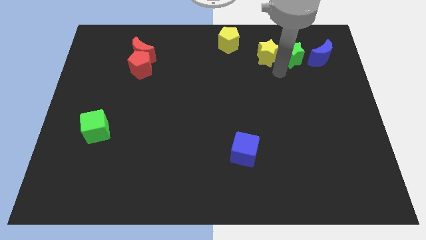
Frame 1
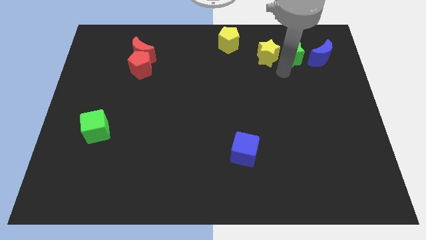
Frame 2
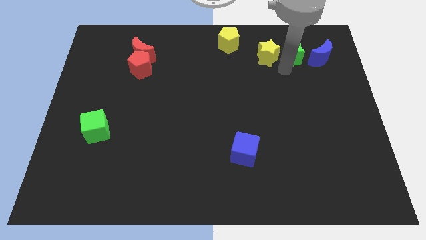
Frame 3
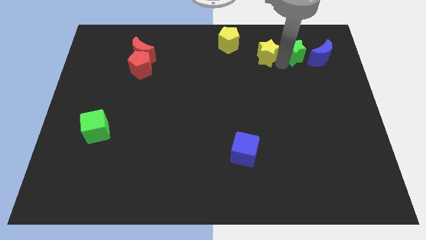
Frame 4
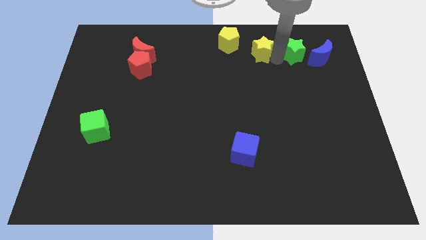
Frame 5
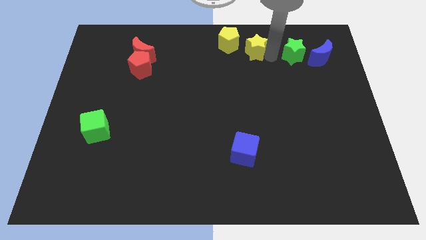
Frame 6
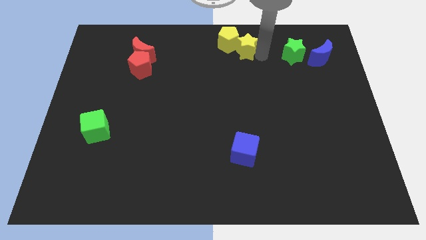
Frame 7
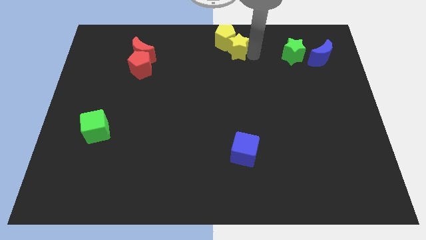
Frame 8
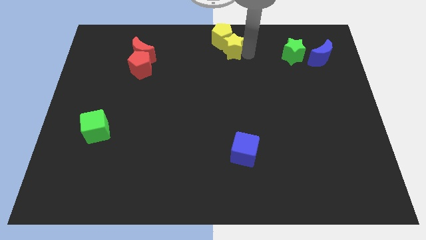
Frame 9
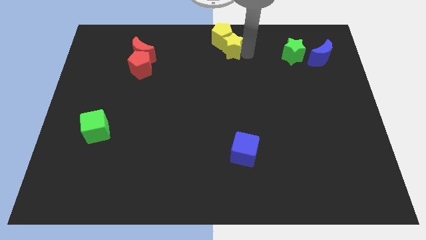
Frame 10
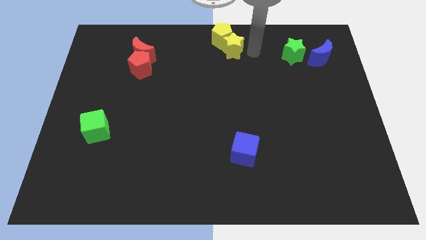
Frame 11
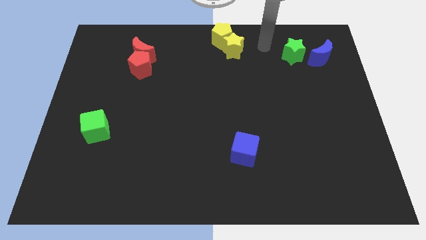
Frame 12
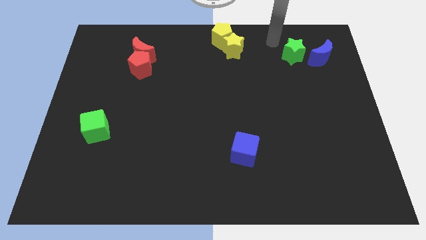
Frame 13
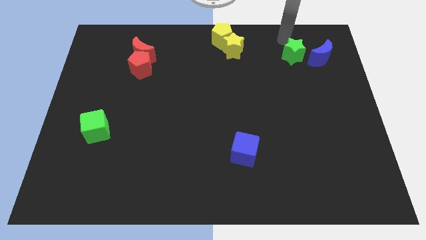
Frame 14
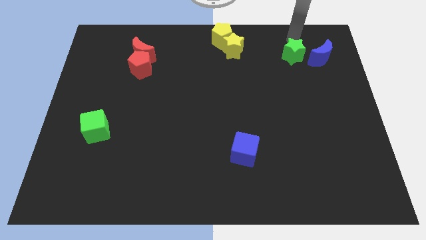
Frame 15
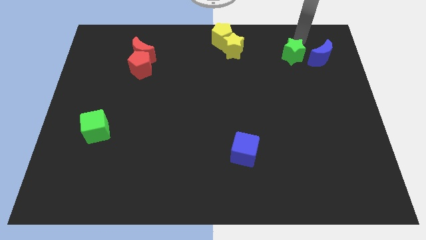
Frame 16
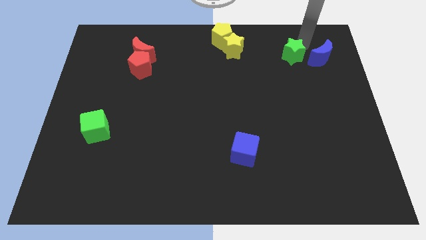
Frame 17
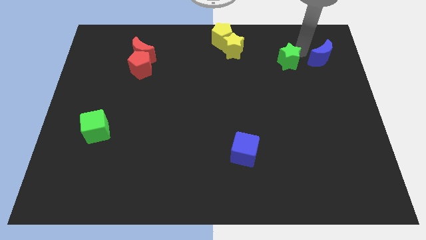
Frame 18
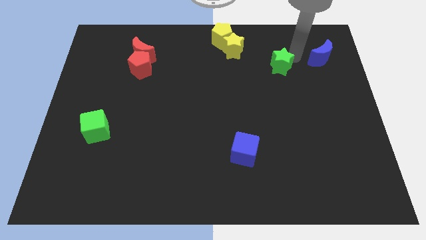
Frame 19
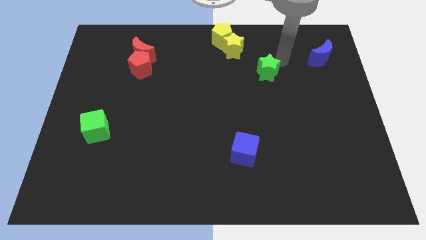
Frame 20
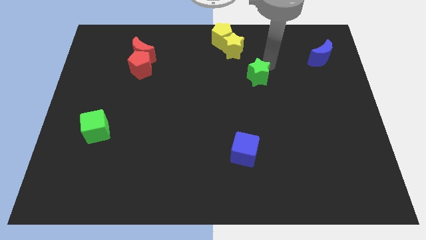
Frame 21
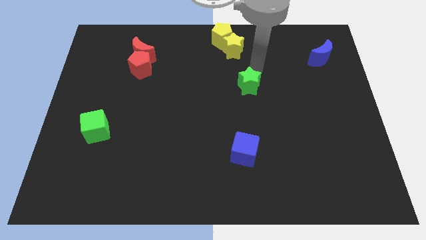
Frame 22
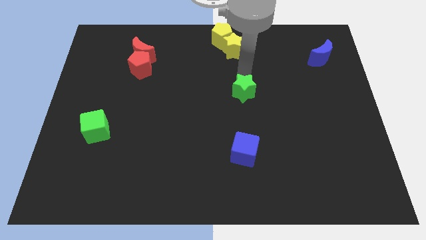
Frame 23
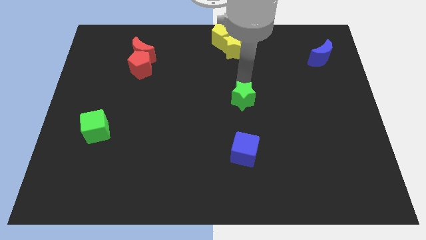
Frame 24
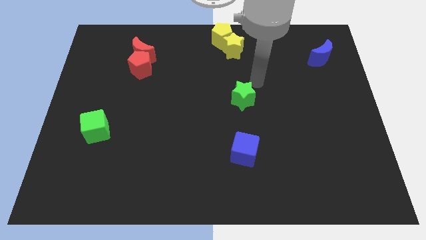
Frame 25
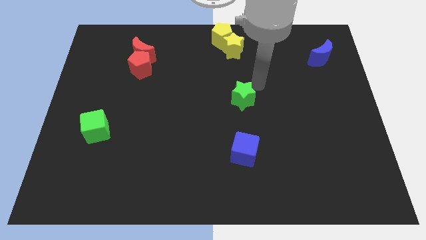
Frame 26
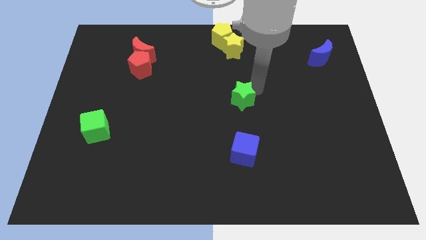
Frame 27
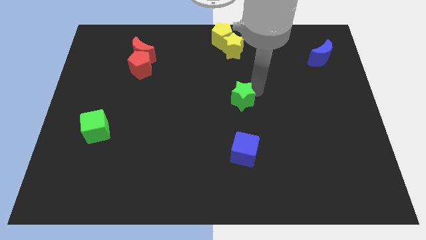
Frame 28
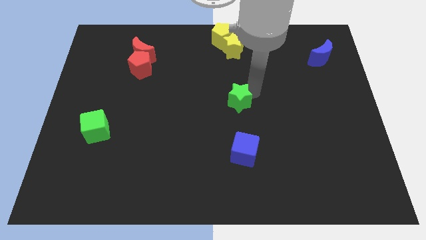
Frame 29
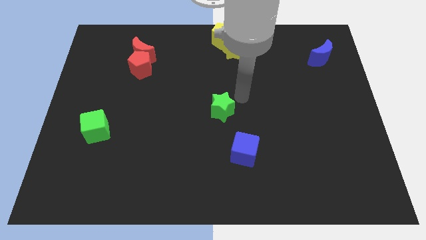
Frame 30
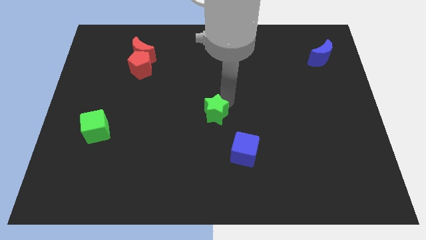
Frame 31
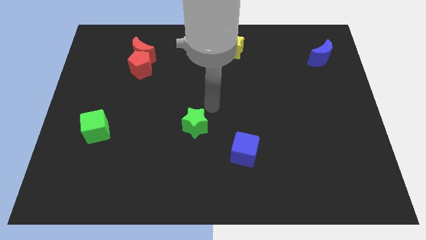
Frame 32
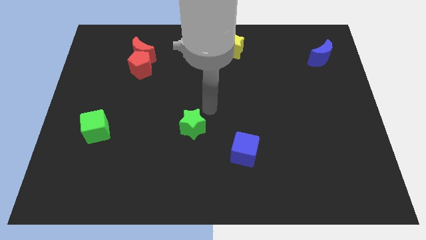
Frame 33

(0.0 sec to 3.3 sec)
push the green star to the right side of the green cube

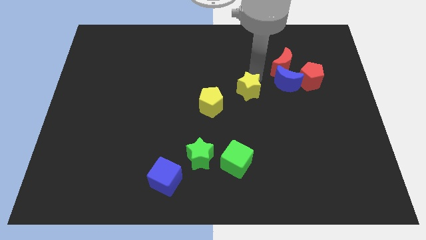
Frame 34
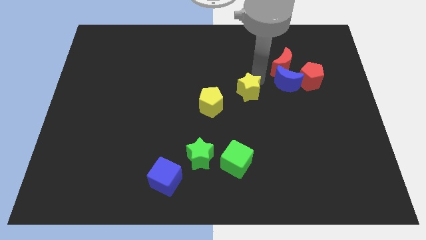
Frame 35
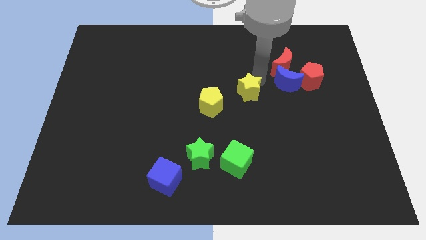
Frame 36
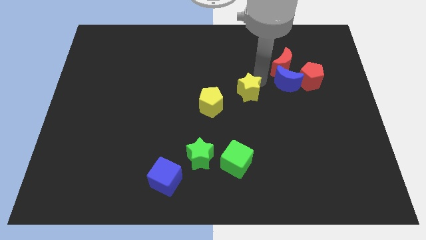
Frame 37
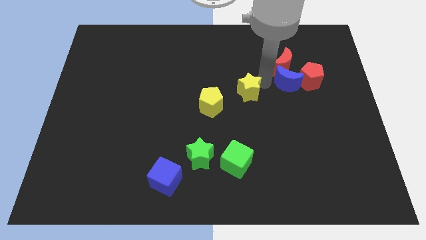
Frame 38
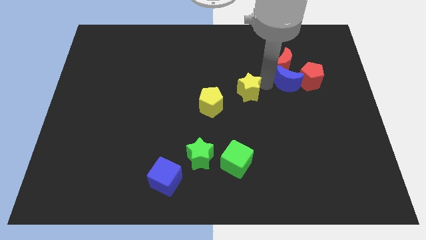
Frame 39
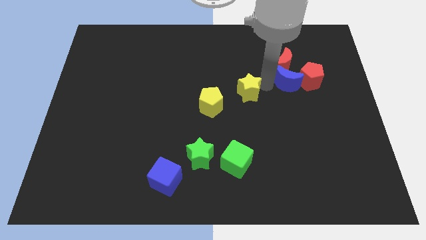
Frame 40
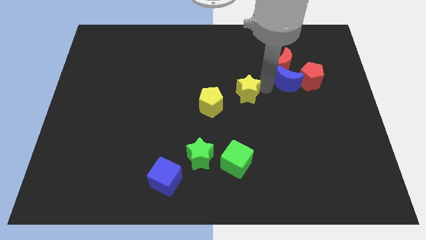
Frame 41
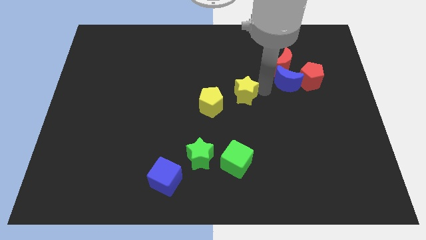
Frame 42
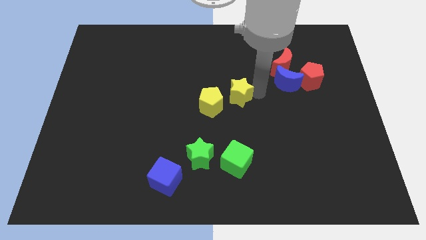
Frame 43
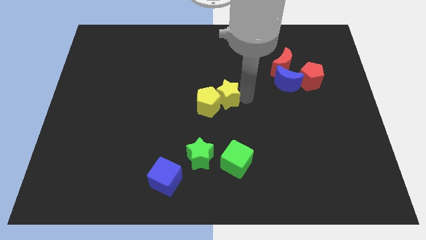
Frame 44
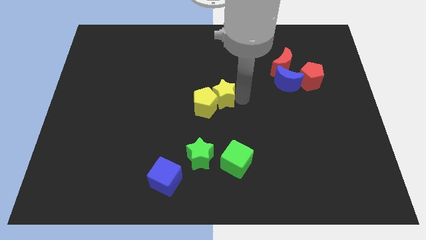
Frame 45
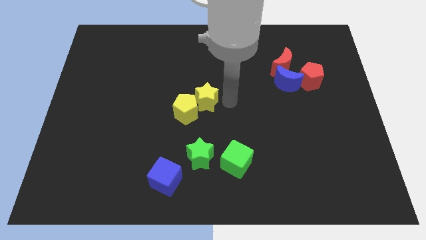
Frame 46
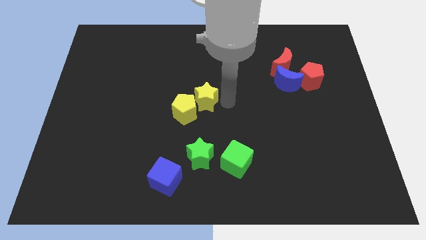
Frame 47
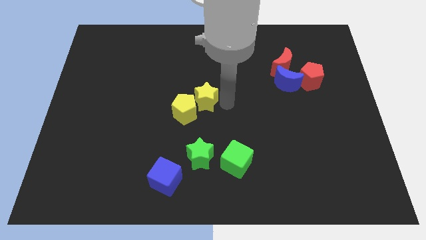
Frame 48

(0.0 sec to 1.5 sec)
push the yellow pentagon with the yellow star

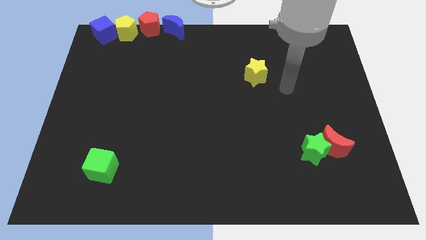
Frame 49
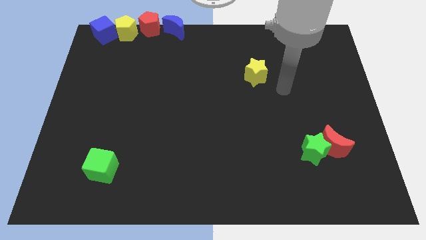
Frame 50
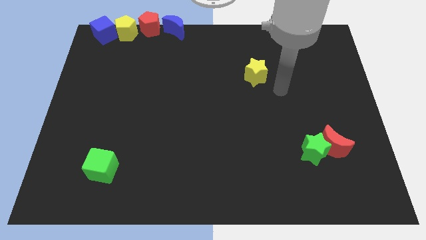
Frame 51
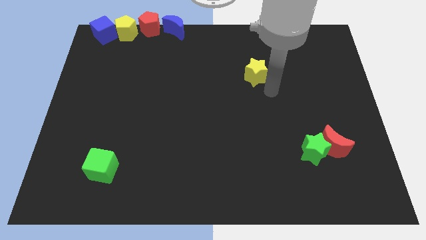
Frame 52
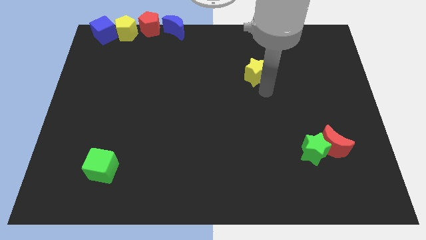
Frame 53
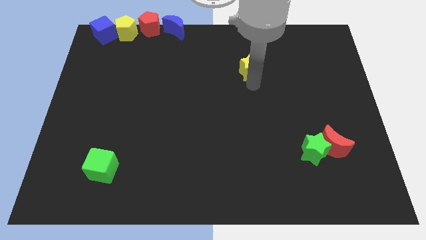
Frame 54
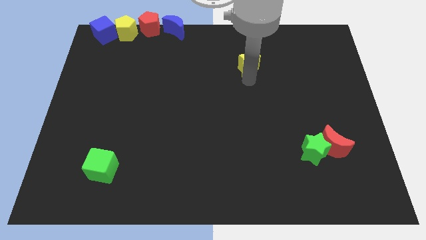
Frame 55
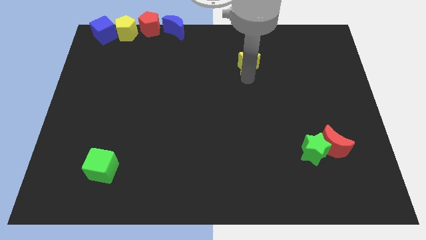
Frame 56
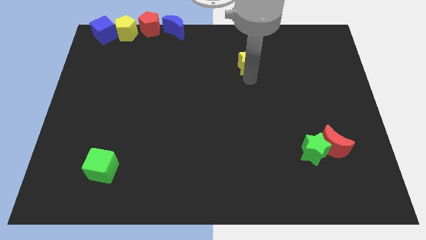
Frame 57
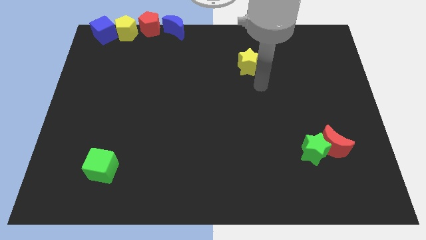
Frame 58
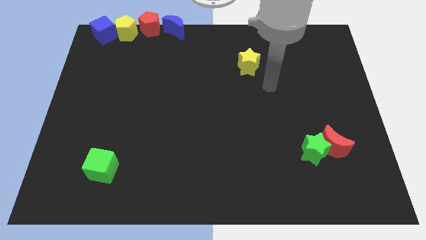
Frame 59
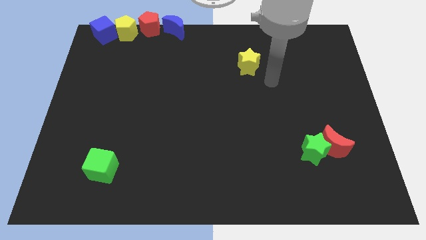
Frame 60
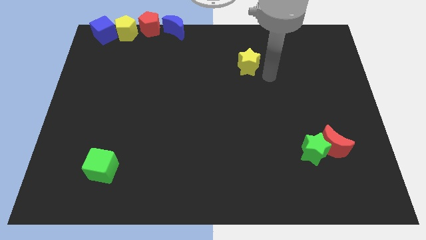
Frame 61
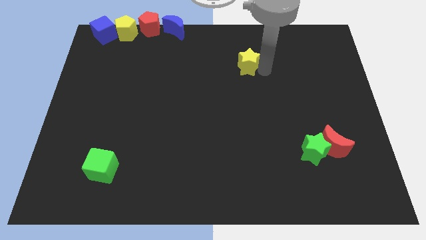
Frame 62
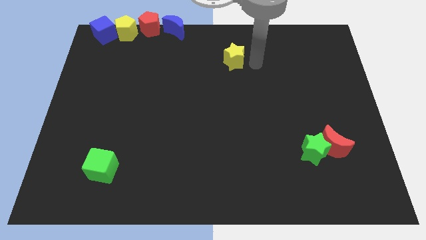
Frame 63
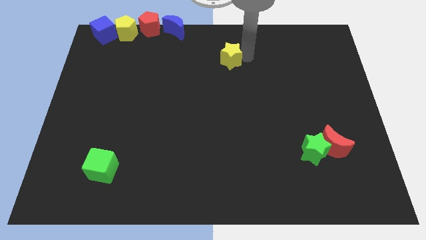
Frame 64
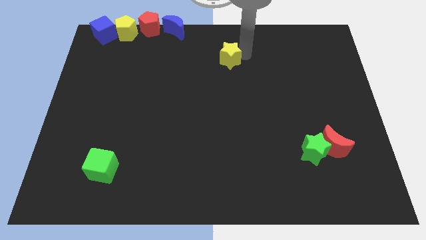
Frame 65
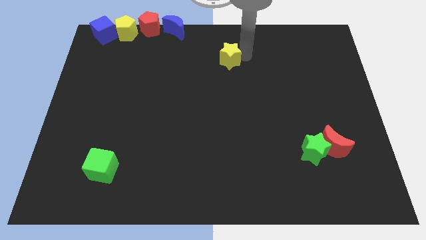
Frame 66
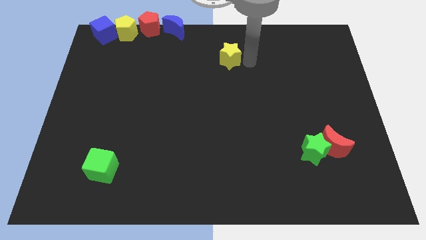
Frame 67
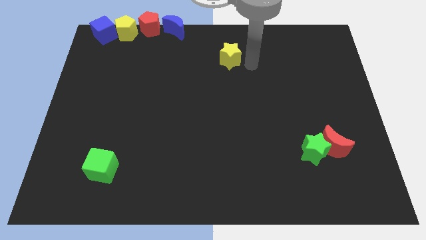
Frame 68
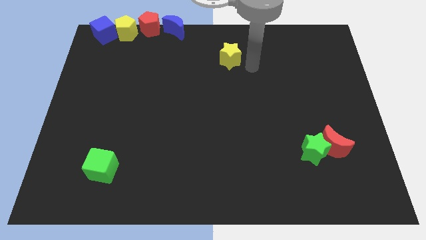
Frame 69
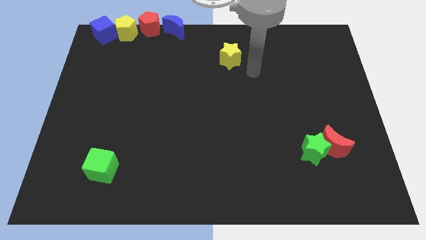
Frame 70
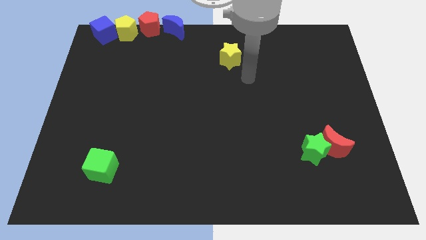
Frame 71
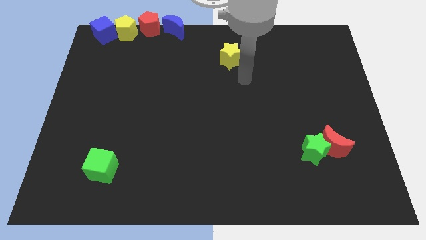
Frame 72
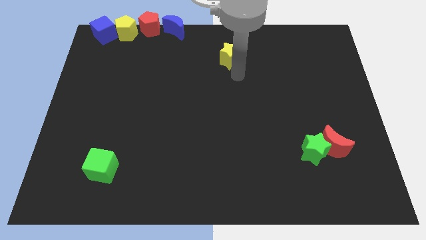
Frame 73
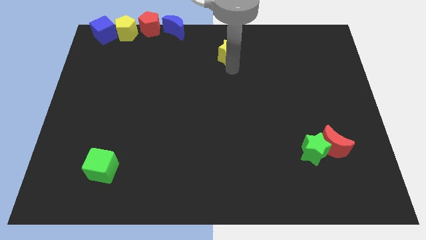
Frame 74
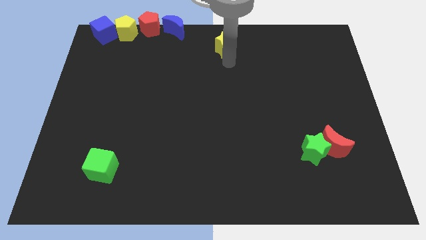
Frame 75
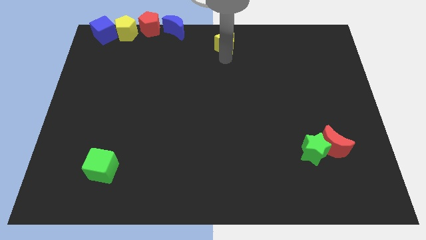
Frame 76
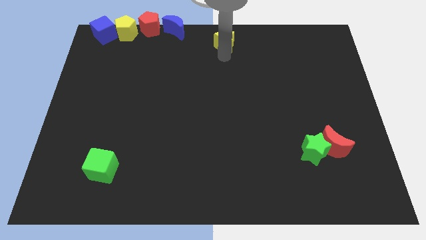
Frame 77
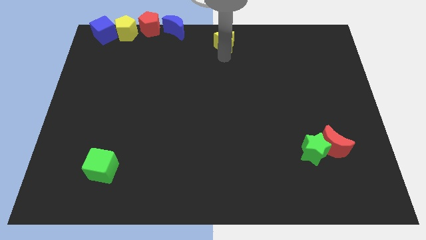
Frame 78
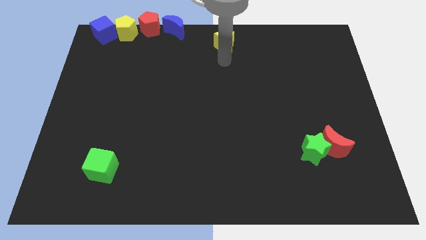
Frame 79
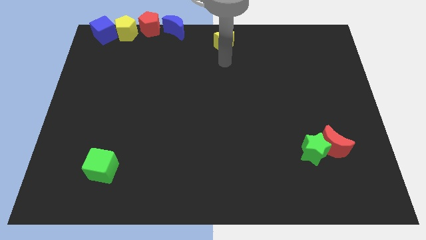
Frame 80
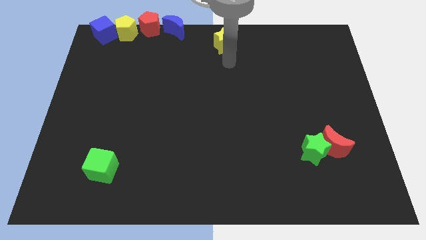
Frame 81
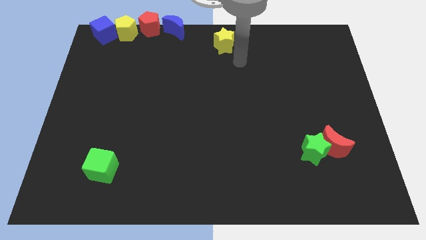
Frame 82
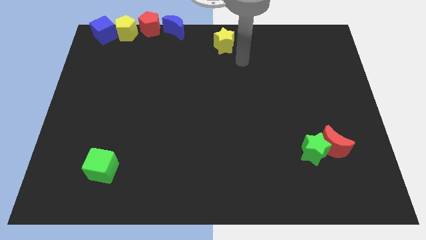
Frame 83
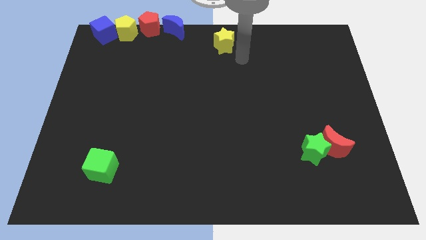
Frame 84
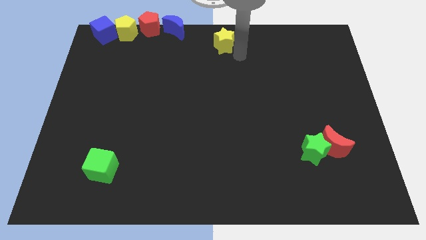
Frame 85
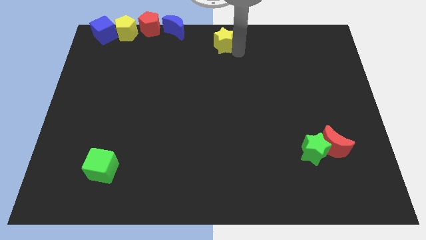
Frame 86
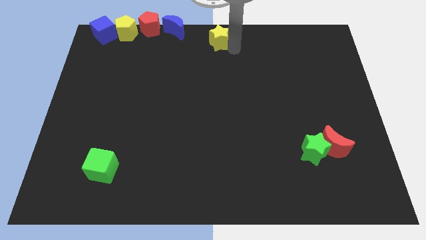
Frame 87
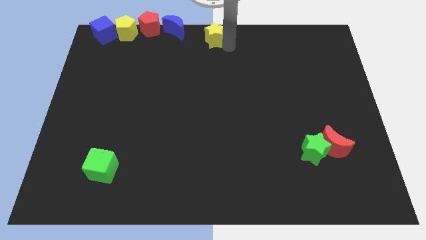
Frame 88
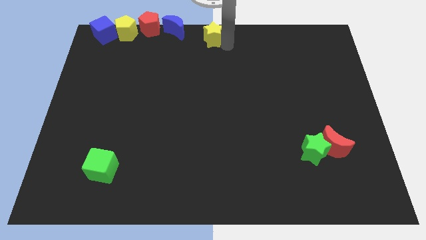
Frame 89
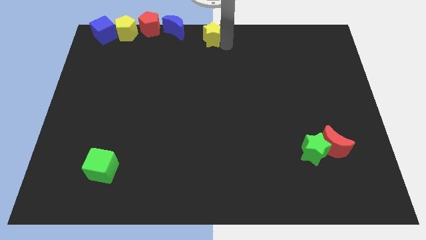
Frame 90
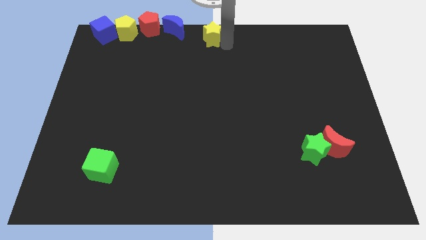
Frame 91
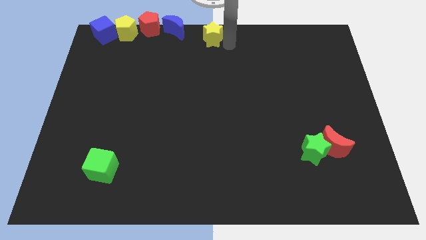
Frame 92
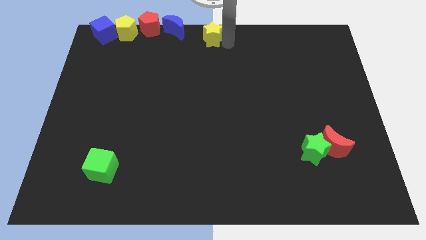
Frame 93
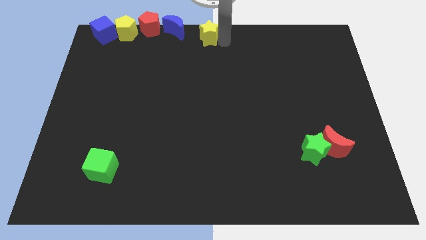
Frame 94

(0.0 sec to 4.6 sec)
move the yellow star to the top center of the board
